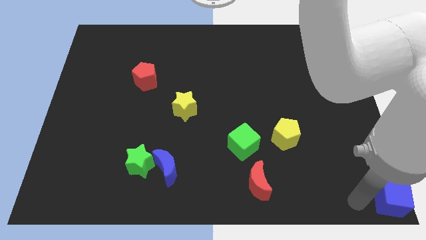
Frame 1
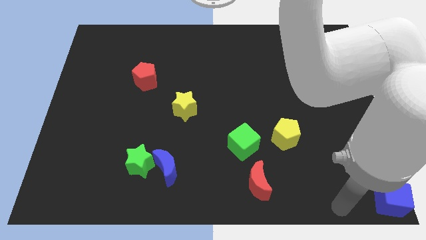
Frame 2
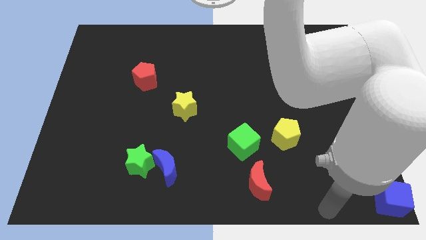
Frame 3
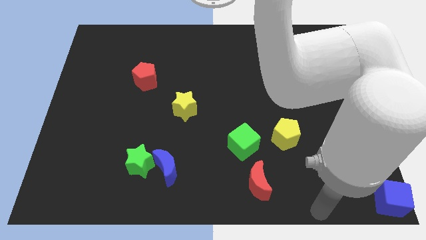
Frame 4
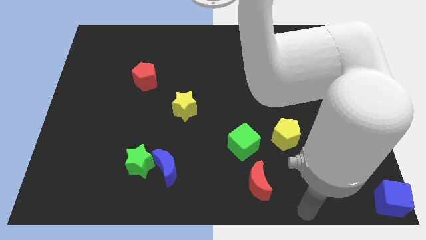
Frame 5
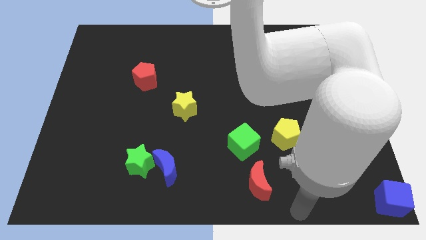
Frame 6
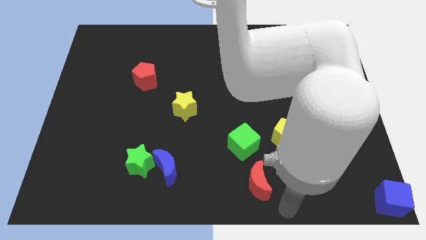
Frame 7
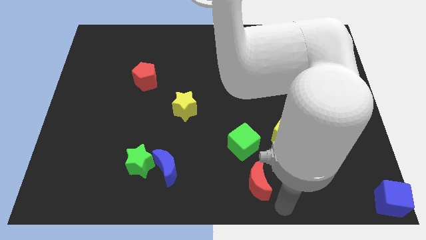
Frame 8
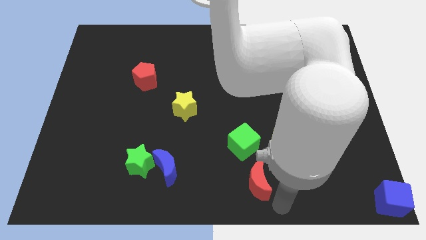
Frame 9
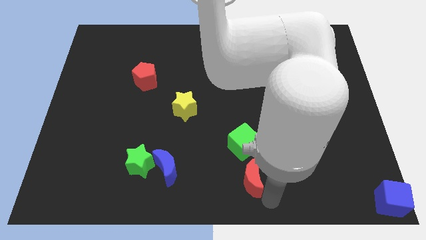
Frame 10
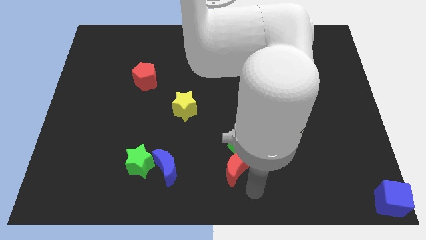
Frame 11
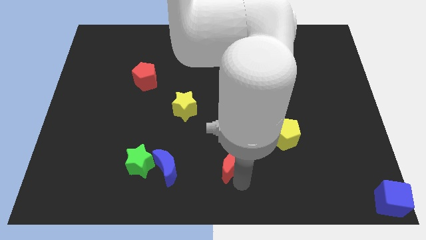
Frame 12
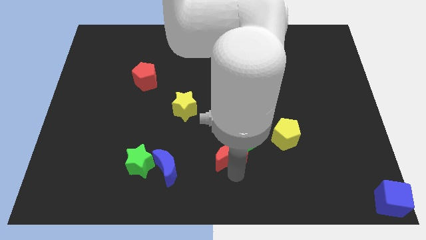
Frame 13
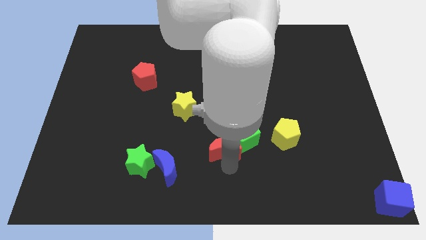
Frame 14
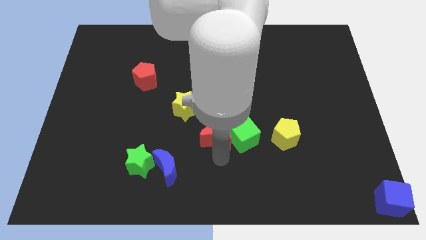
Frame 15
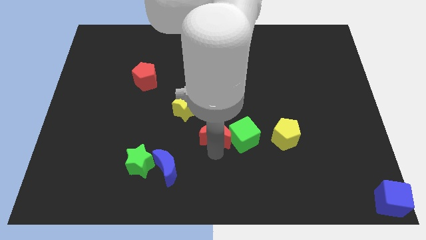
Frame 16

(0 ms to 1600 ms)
push the red moon into the green cube

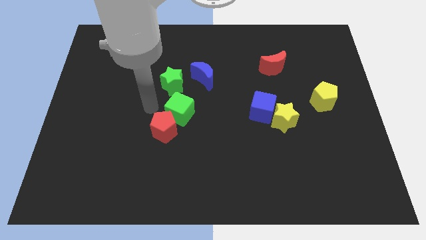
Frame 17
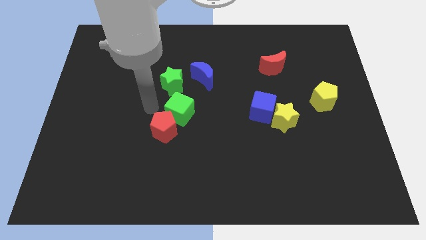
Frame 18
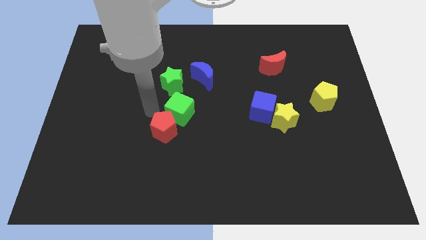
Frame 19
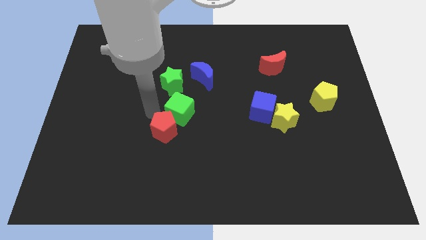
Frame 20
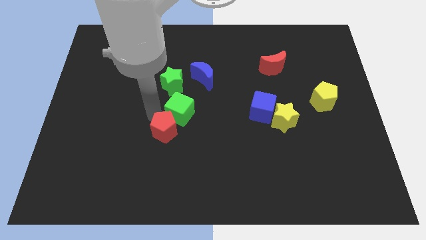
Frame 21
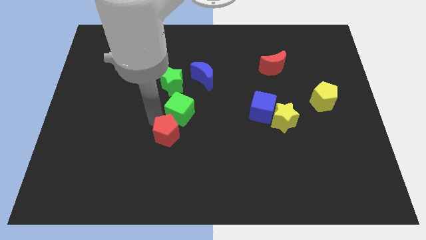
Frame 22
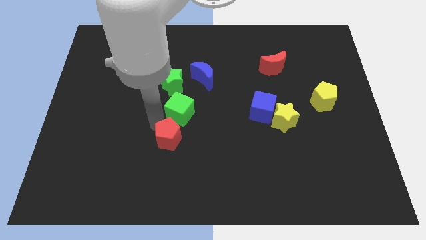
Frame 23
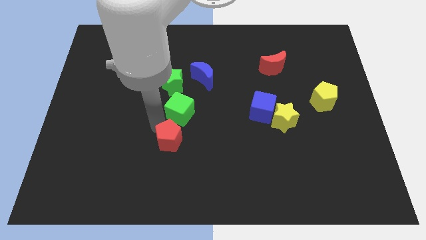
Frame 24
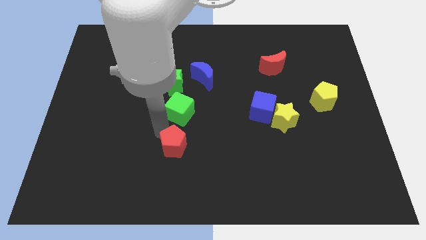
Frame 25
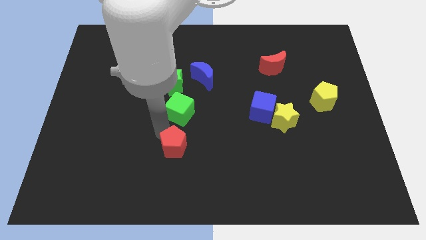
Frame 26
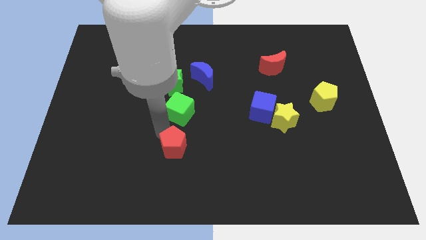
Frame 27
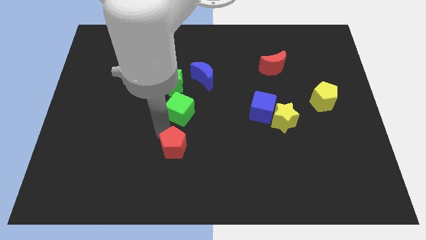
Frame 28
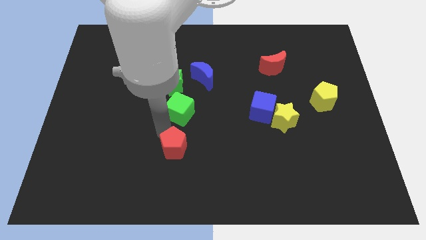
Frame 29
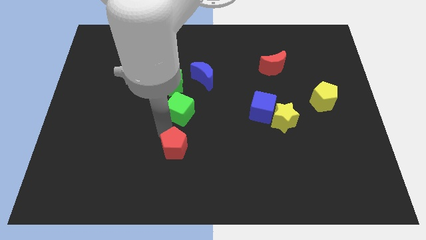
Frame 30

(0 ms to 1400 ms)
move the red pentagon below the green cube

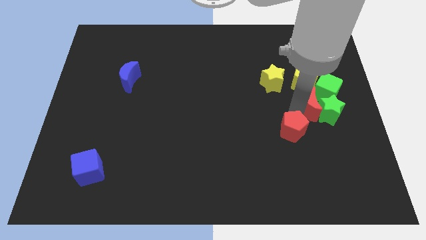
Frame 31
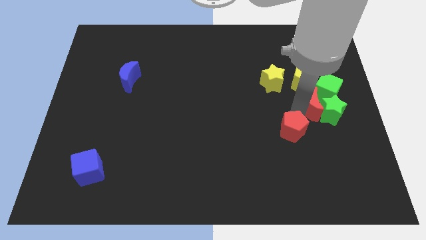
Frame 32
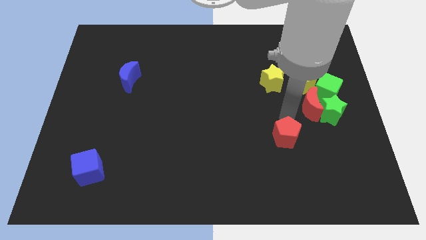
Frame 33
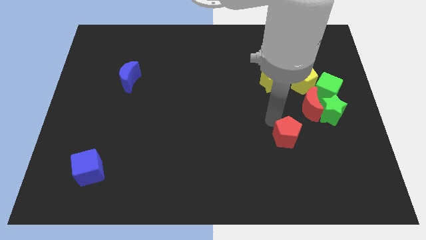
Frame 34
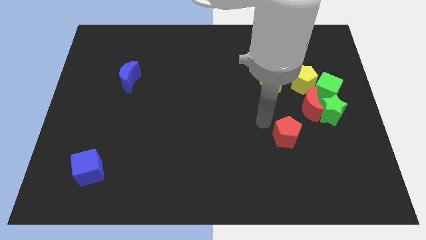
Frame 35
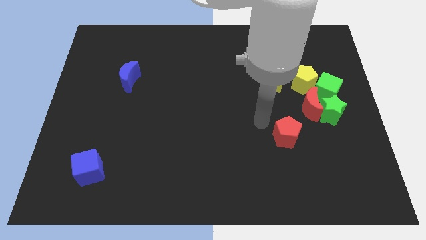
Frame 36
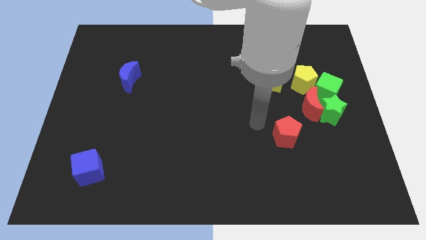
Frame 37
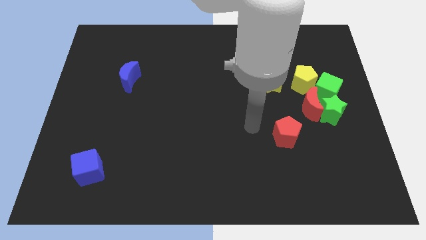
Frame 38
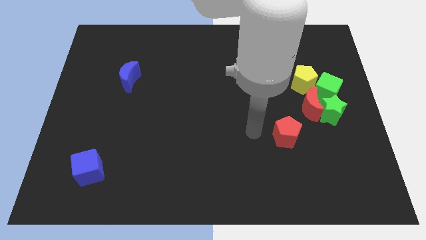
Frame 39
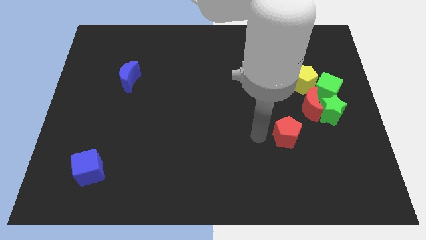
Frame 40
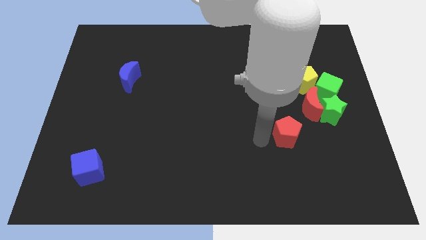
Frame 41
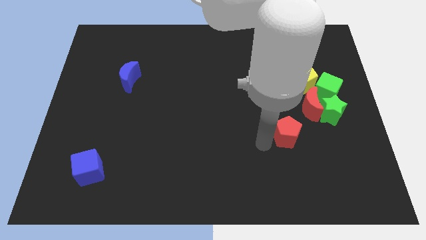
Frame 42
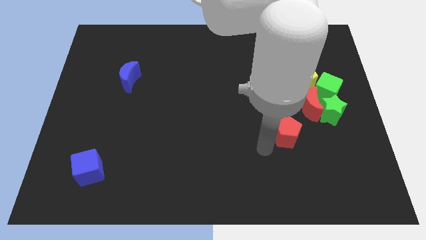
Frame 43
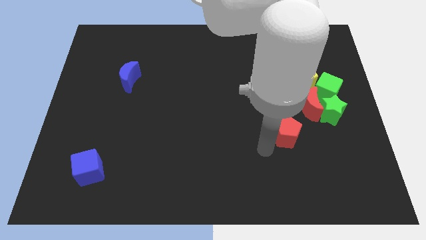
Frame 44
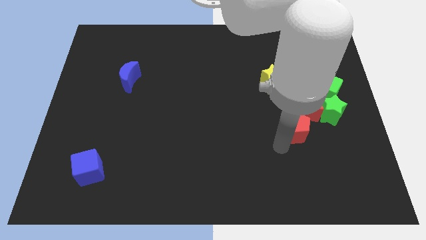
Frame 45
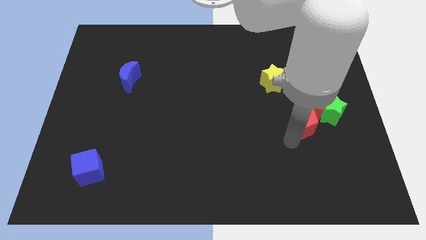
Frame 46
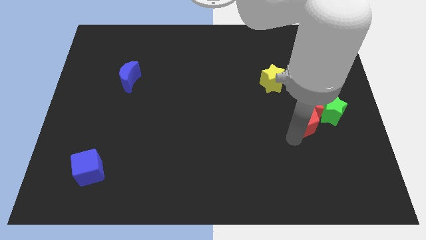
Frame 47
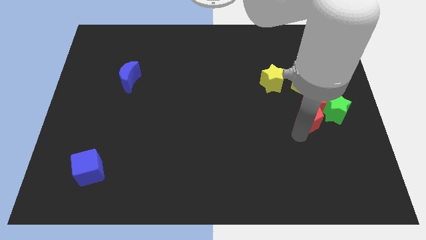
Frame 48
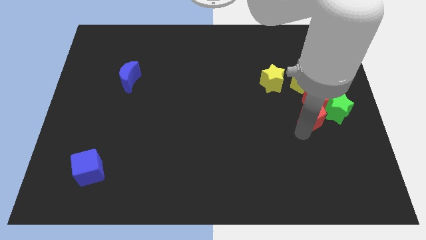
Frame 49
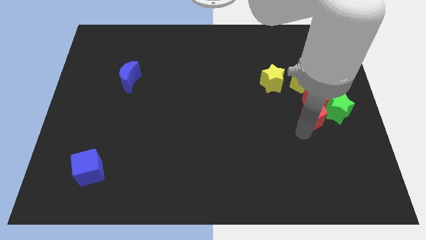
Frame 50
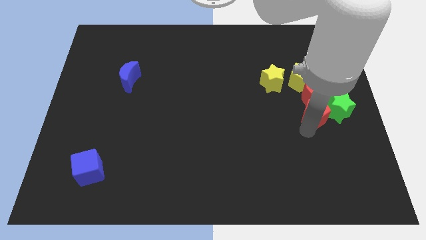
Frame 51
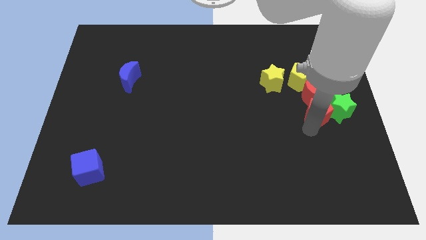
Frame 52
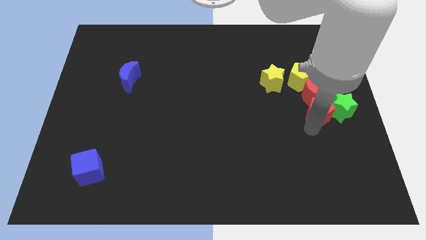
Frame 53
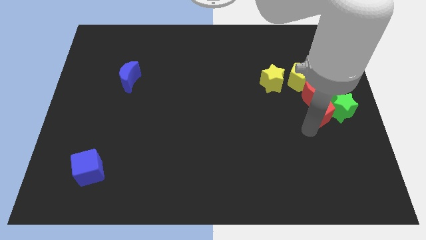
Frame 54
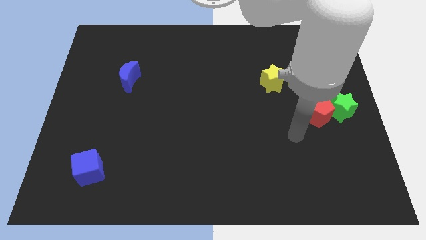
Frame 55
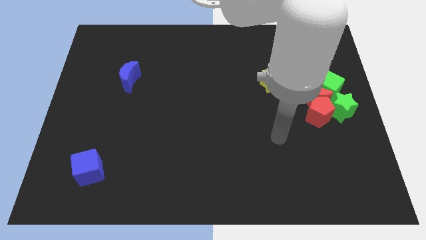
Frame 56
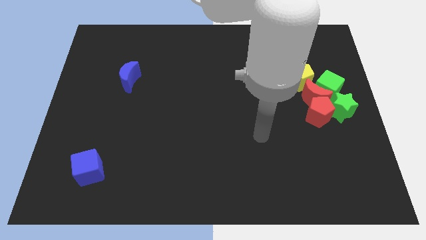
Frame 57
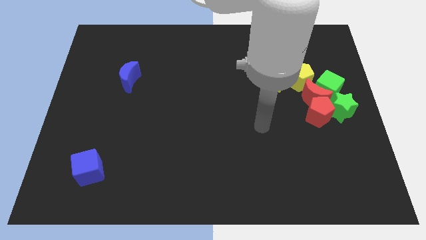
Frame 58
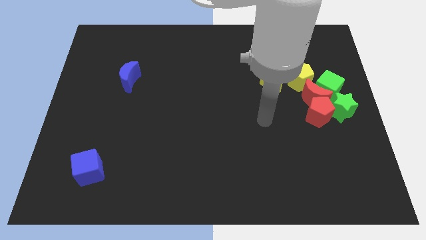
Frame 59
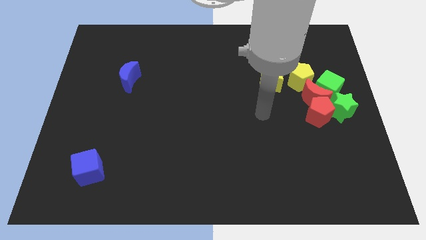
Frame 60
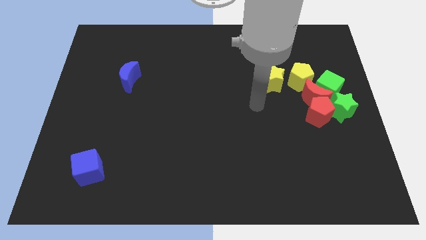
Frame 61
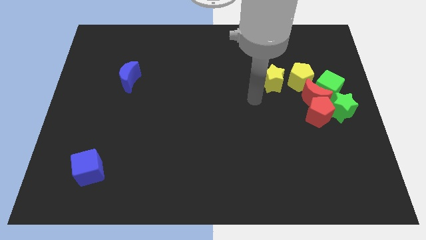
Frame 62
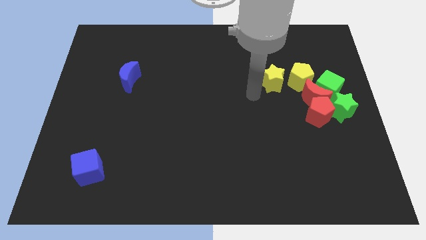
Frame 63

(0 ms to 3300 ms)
move the red pentagon to the left of the green star

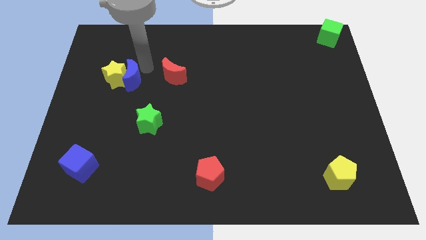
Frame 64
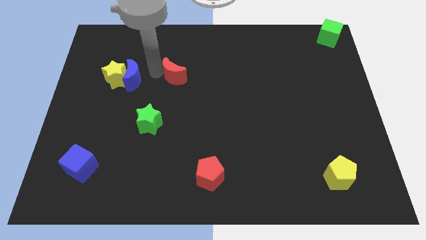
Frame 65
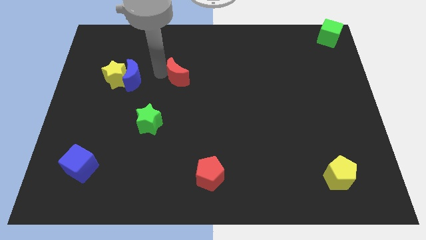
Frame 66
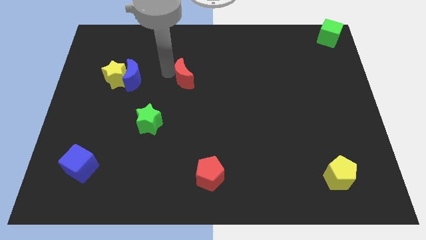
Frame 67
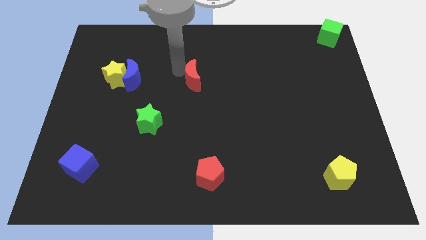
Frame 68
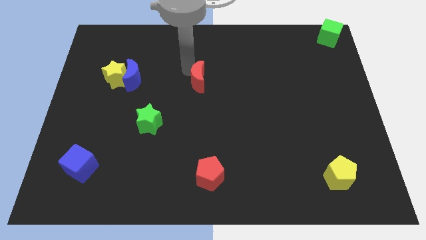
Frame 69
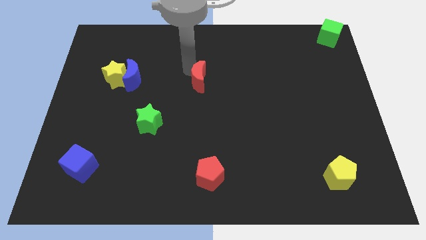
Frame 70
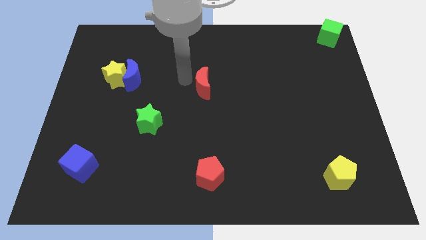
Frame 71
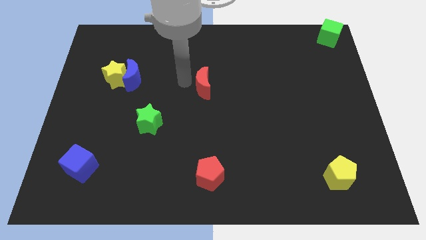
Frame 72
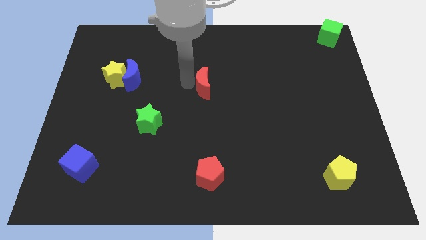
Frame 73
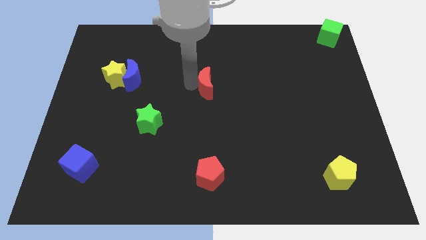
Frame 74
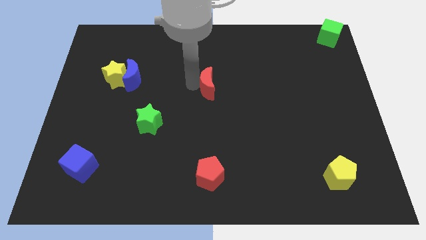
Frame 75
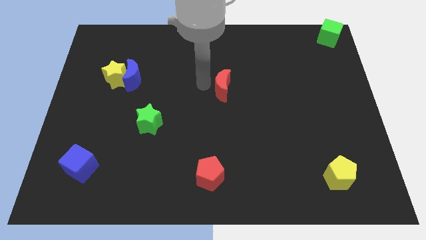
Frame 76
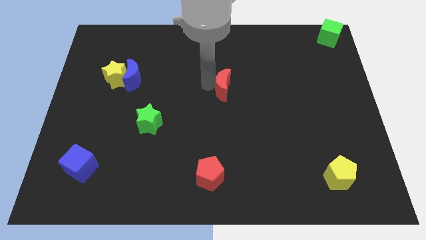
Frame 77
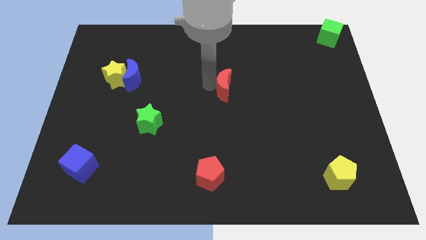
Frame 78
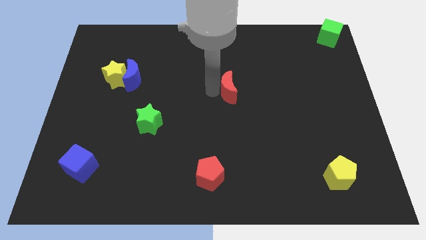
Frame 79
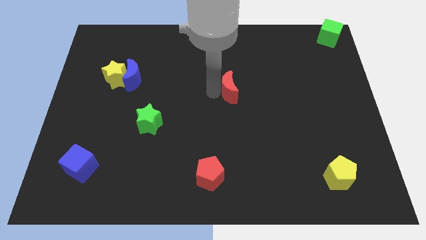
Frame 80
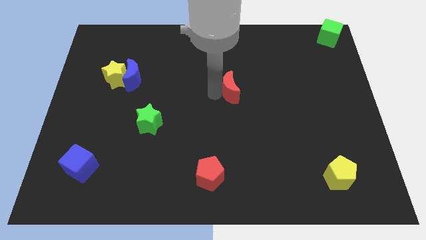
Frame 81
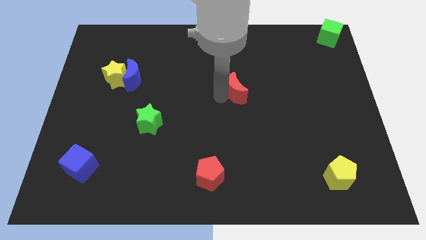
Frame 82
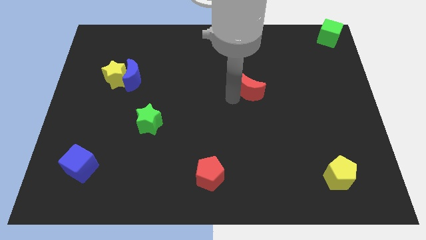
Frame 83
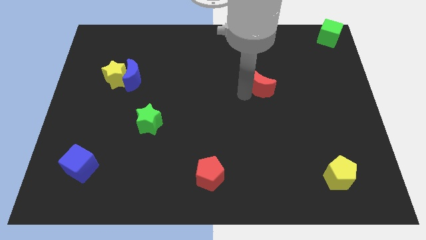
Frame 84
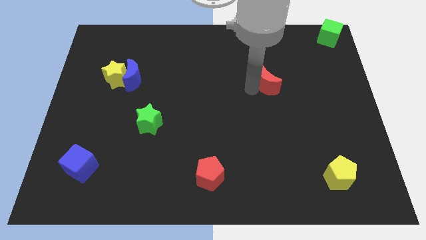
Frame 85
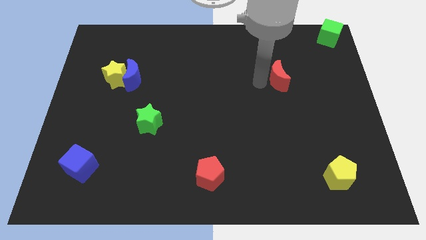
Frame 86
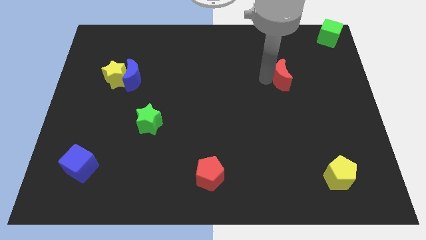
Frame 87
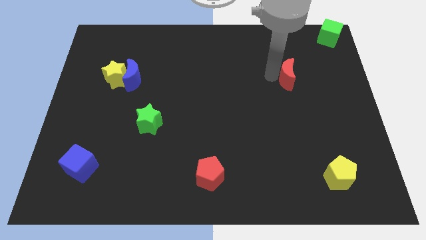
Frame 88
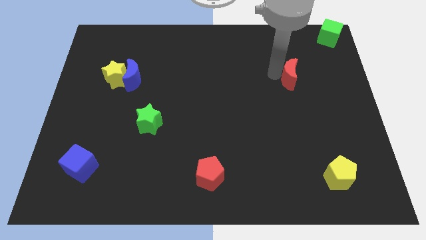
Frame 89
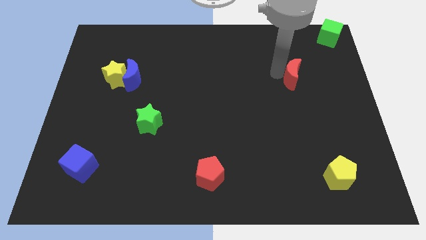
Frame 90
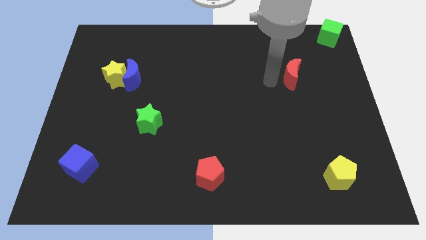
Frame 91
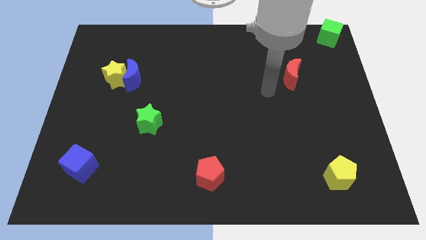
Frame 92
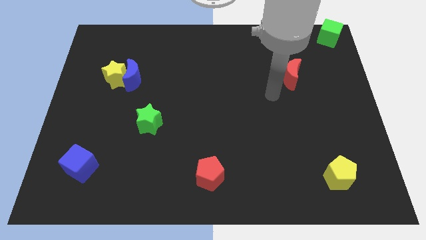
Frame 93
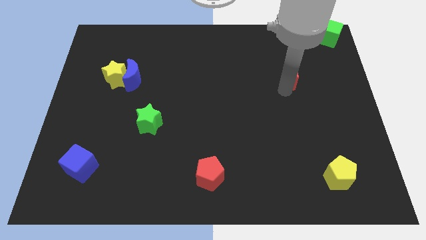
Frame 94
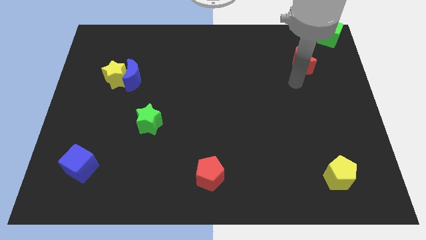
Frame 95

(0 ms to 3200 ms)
push the red crescent diagonal to the red pentagon
